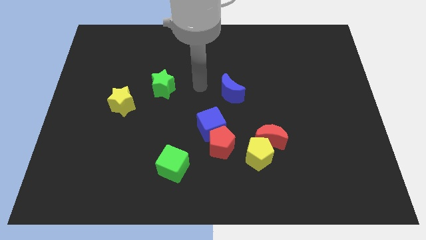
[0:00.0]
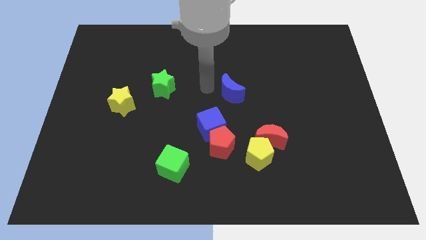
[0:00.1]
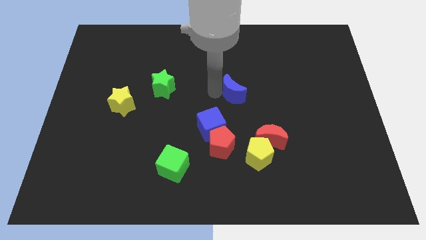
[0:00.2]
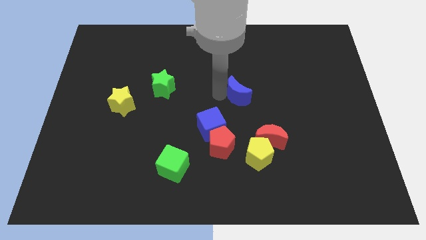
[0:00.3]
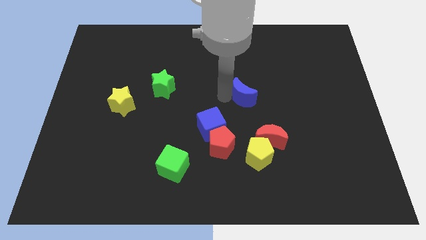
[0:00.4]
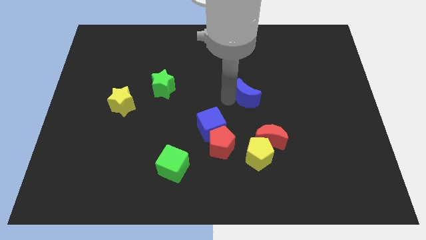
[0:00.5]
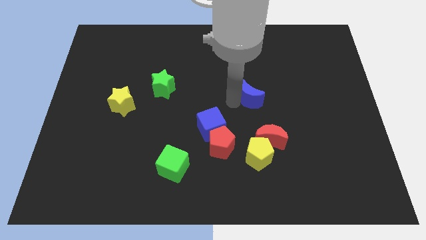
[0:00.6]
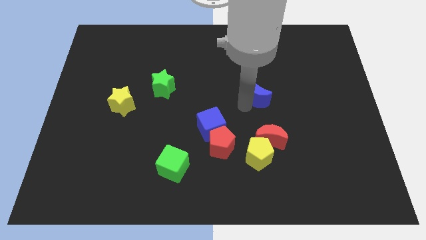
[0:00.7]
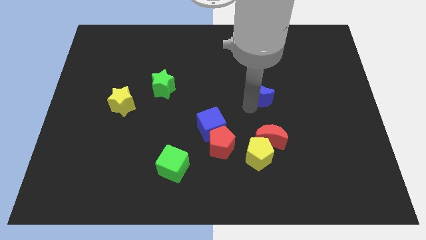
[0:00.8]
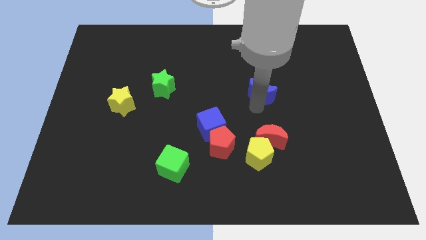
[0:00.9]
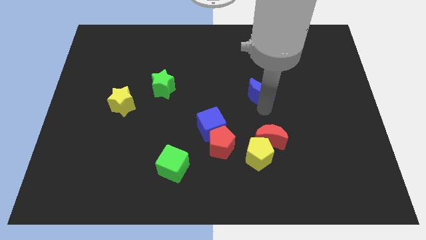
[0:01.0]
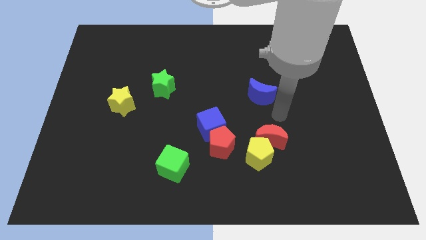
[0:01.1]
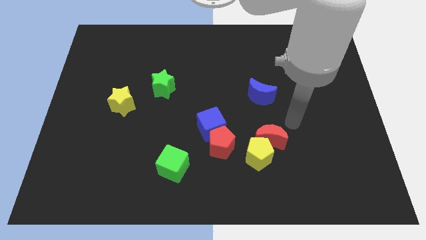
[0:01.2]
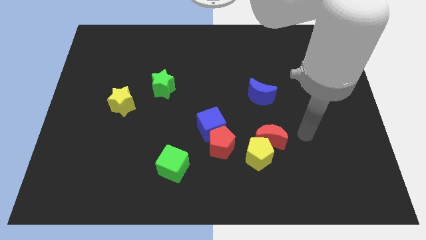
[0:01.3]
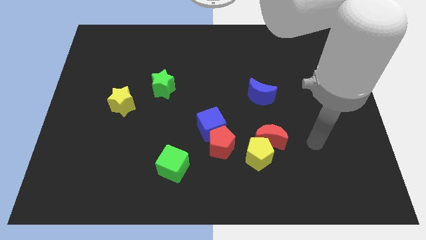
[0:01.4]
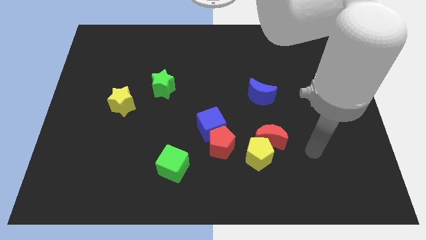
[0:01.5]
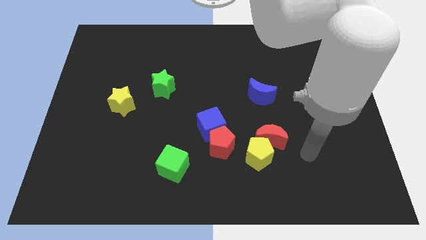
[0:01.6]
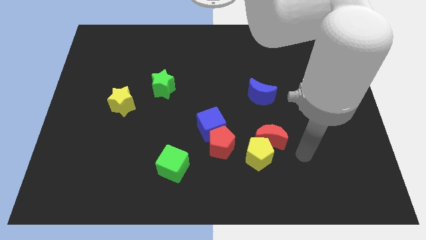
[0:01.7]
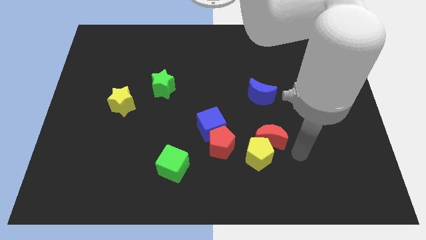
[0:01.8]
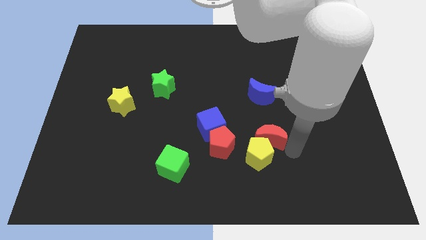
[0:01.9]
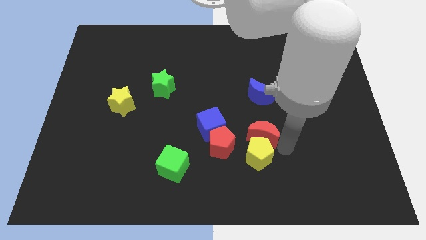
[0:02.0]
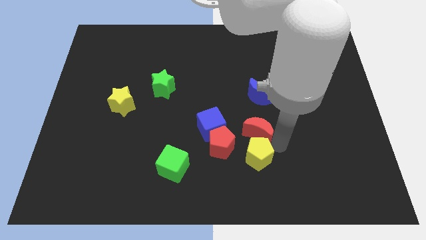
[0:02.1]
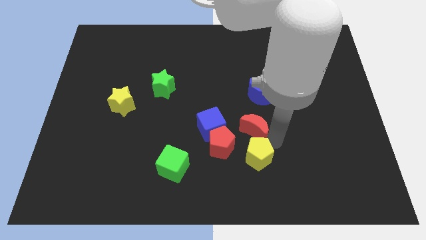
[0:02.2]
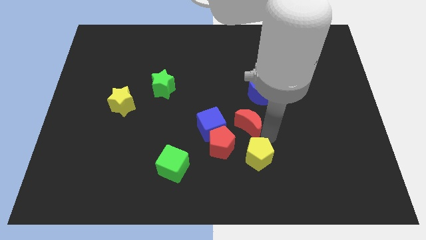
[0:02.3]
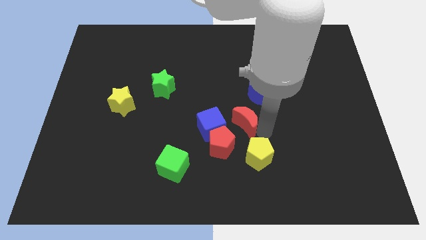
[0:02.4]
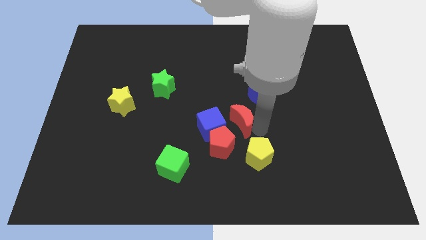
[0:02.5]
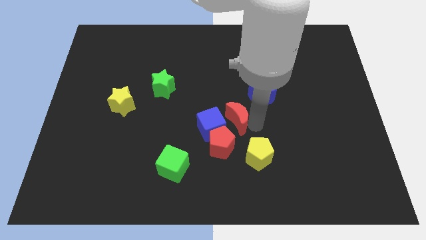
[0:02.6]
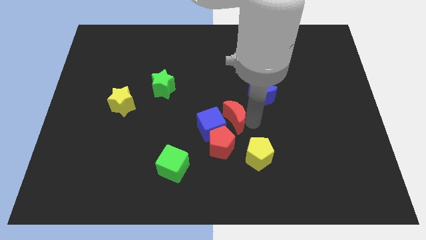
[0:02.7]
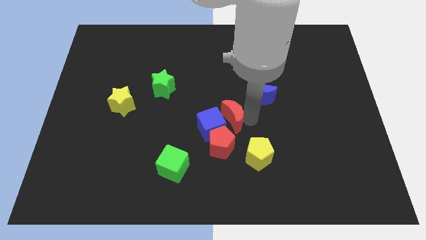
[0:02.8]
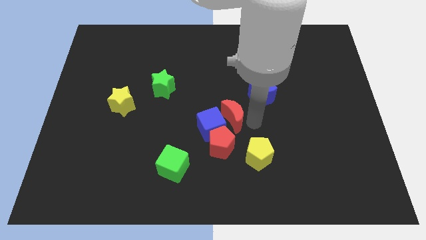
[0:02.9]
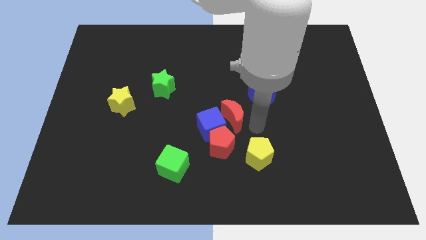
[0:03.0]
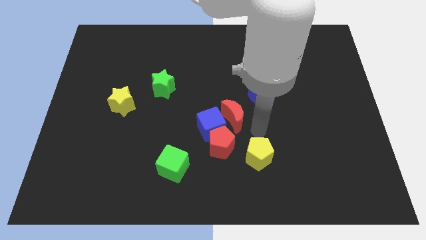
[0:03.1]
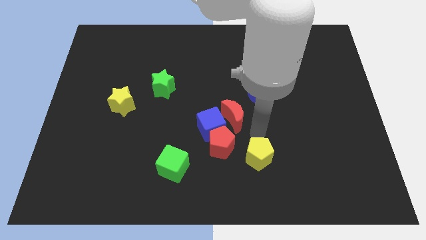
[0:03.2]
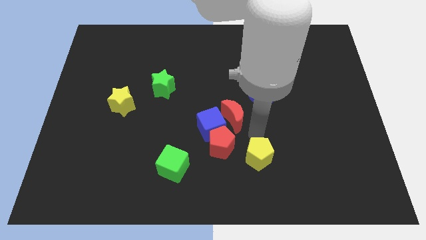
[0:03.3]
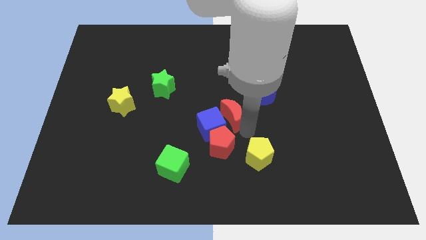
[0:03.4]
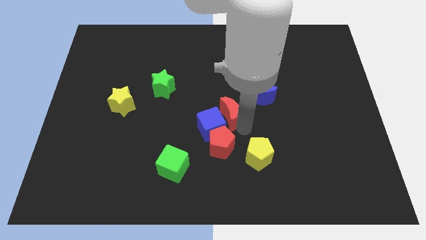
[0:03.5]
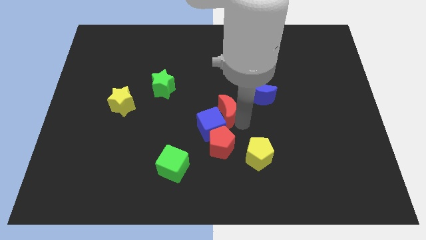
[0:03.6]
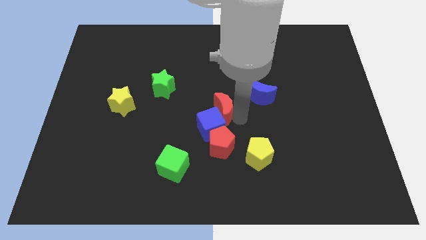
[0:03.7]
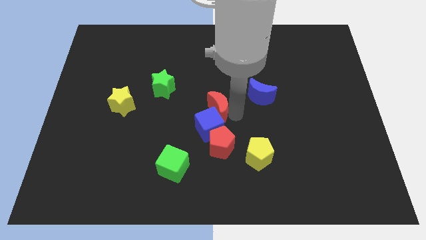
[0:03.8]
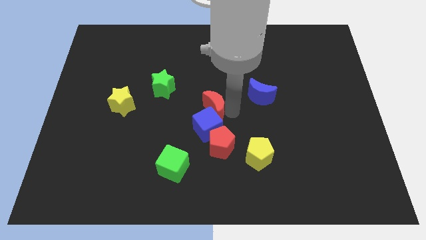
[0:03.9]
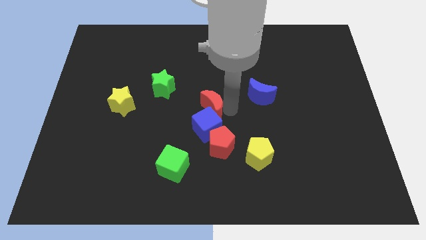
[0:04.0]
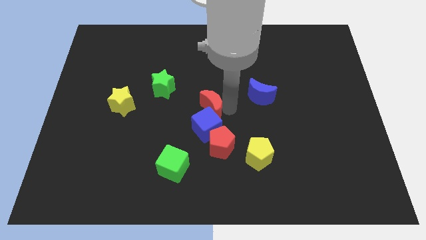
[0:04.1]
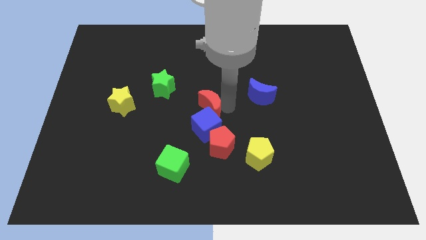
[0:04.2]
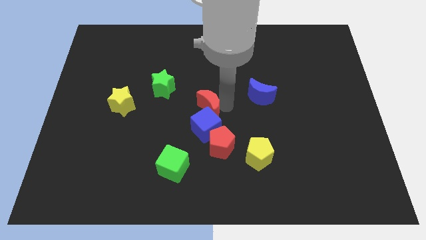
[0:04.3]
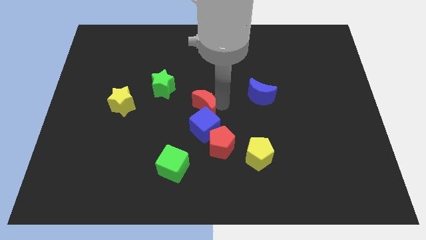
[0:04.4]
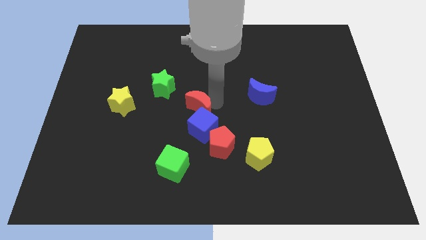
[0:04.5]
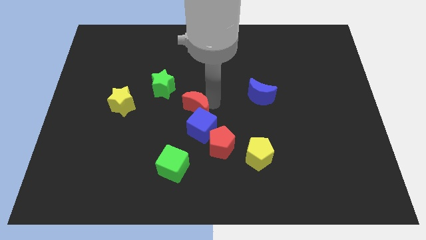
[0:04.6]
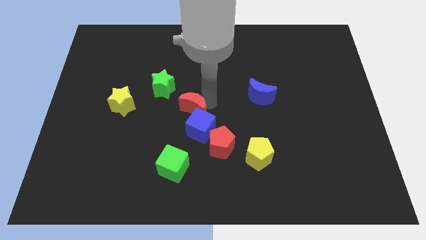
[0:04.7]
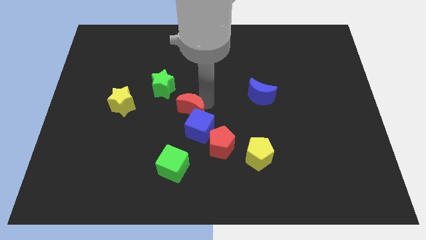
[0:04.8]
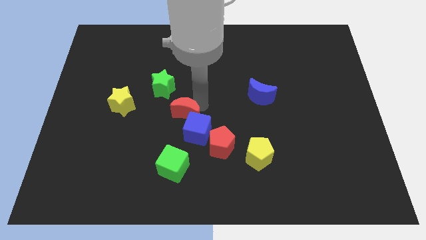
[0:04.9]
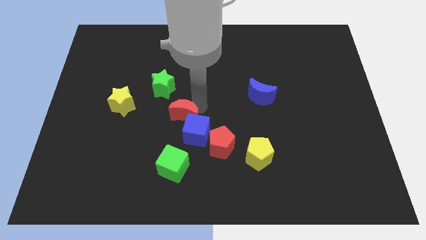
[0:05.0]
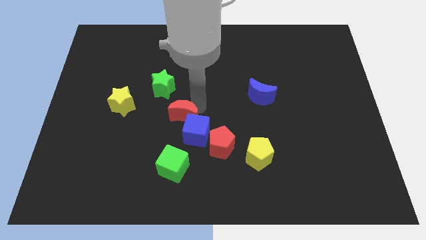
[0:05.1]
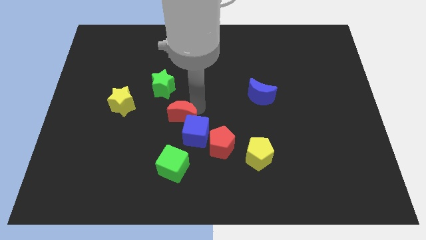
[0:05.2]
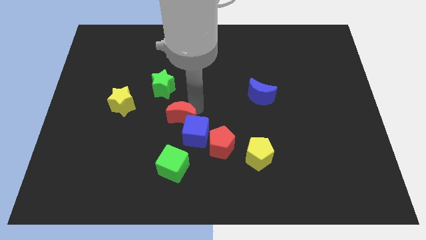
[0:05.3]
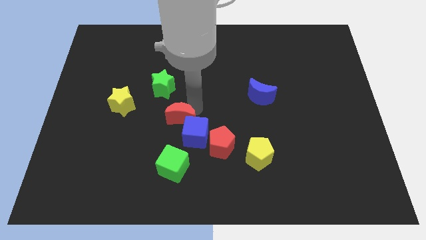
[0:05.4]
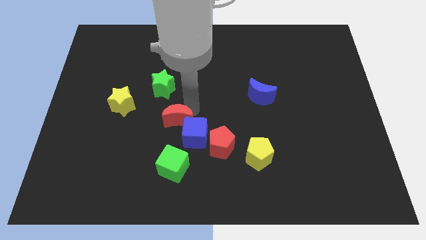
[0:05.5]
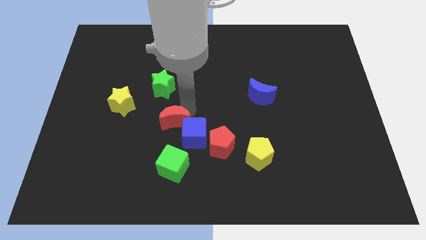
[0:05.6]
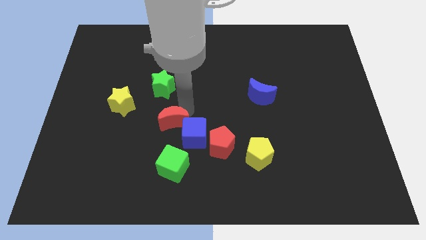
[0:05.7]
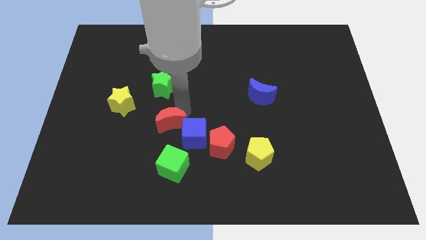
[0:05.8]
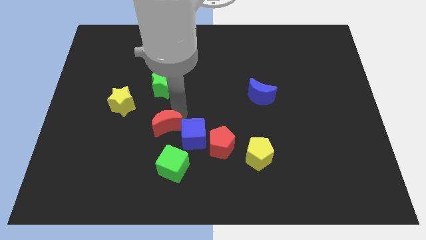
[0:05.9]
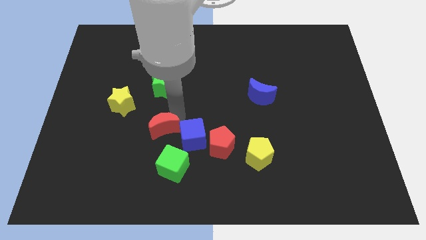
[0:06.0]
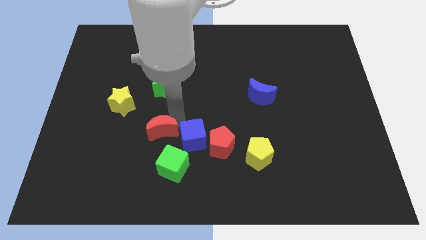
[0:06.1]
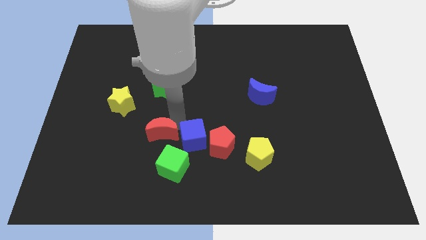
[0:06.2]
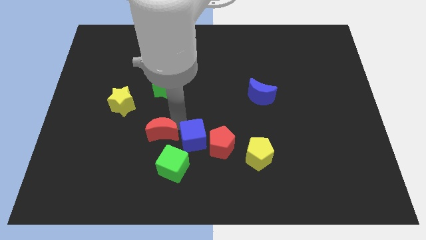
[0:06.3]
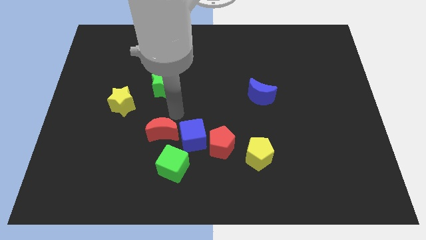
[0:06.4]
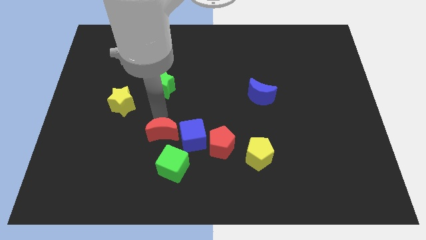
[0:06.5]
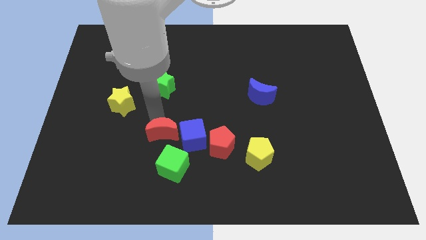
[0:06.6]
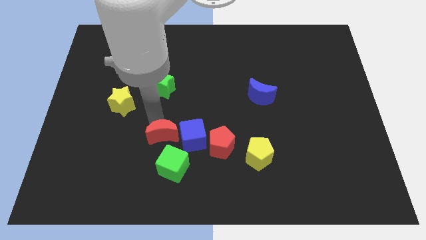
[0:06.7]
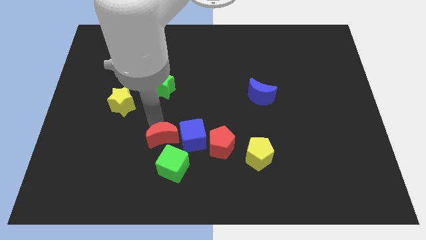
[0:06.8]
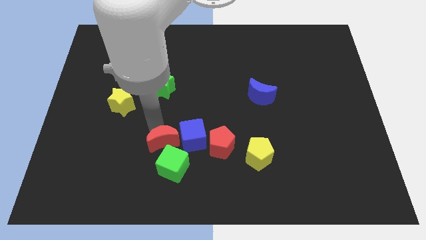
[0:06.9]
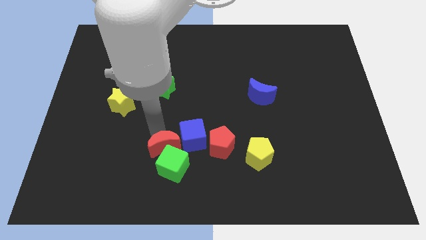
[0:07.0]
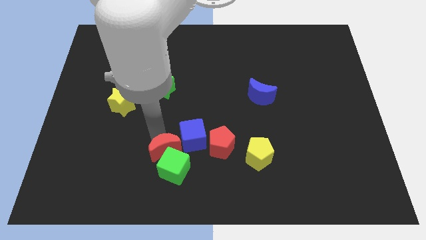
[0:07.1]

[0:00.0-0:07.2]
push the red moon towards the green cube

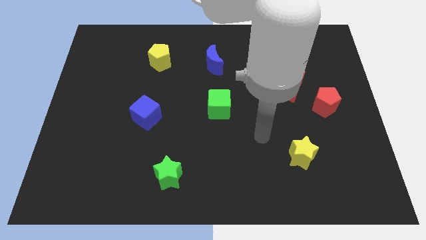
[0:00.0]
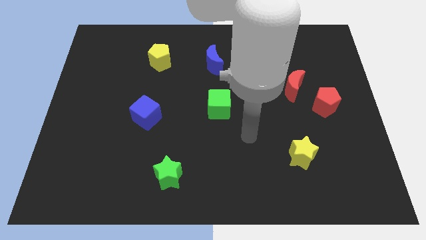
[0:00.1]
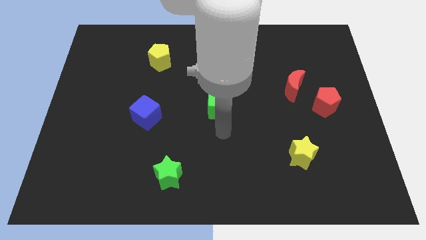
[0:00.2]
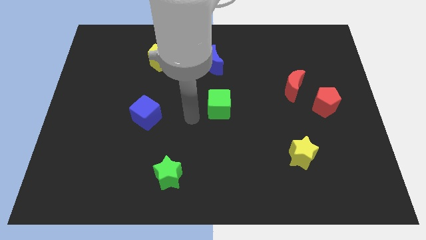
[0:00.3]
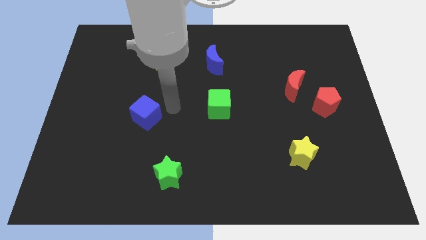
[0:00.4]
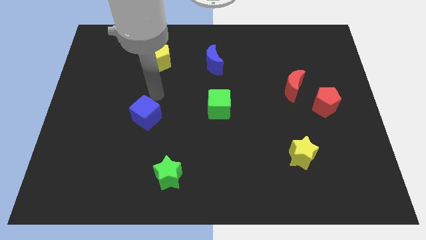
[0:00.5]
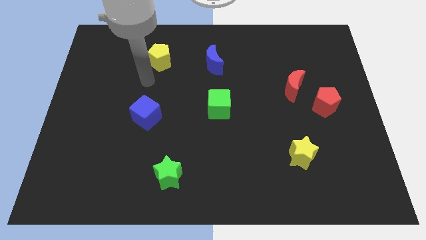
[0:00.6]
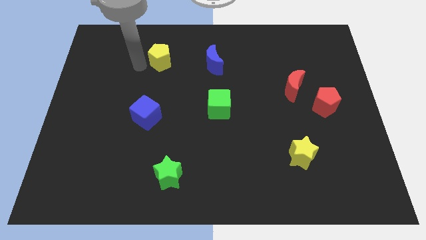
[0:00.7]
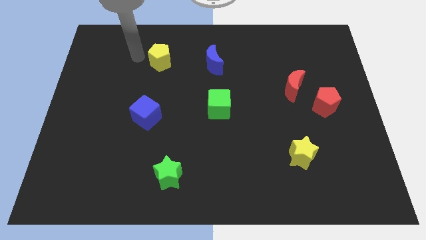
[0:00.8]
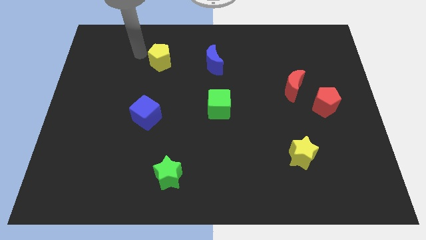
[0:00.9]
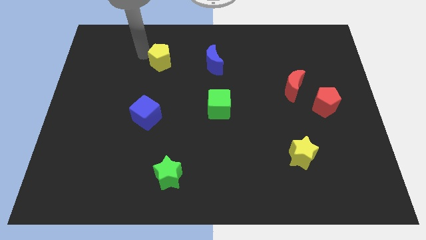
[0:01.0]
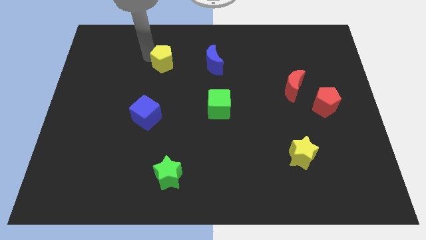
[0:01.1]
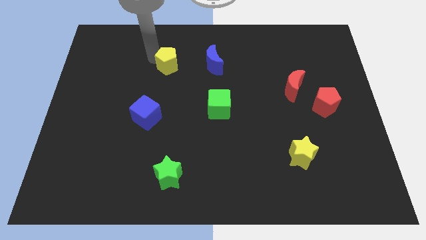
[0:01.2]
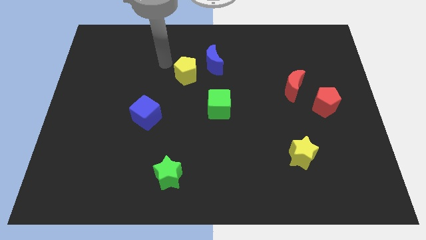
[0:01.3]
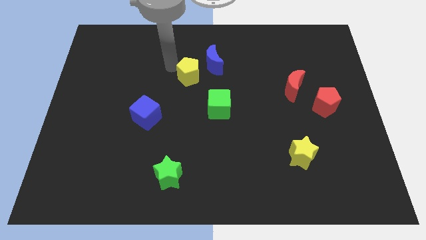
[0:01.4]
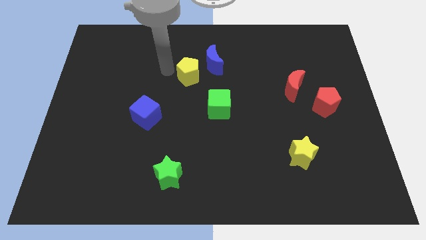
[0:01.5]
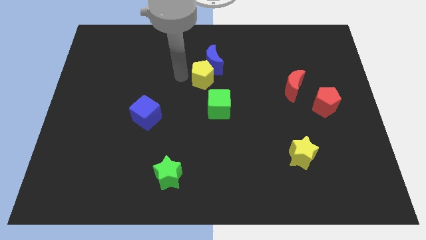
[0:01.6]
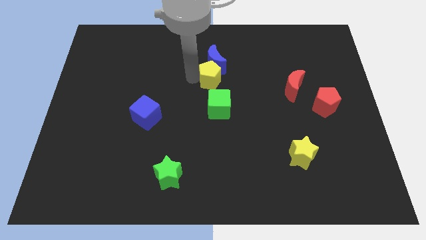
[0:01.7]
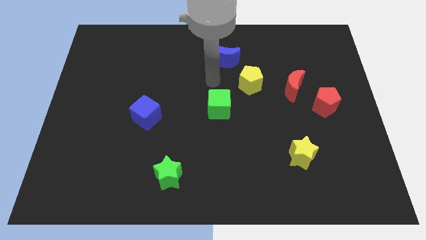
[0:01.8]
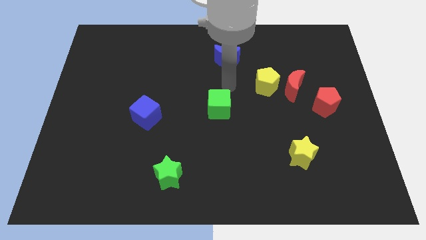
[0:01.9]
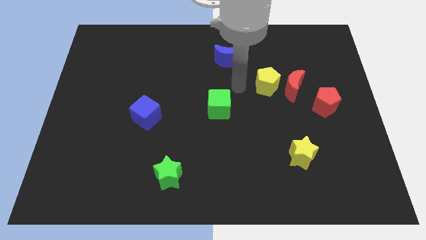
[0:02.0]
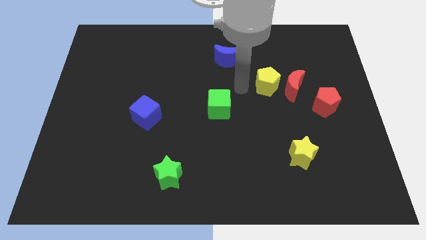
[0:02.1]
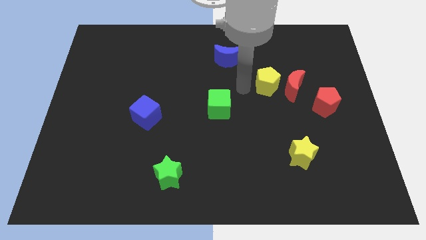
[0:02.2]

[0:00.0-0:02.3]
put the yellow pentagon close to the red moon
